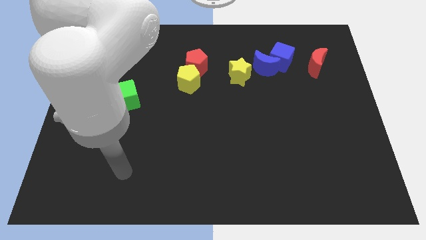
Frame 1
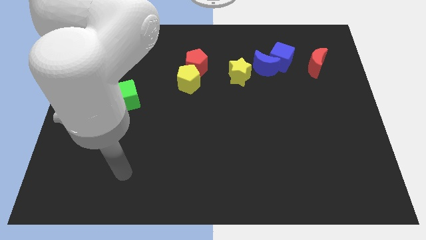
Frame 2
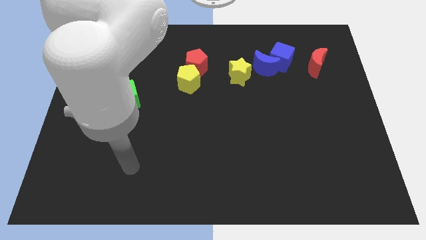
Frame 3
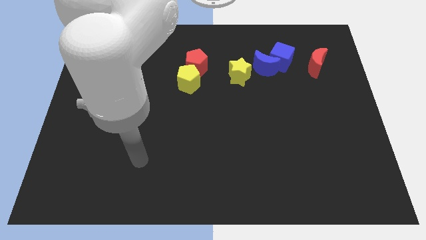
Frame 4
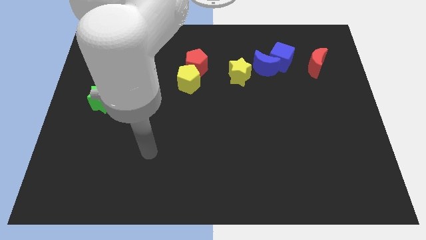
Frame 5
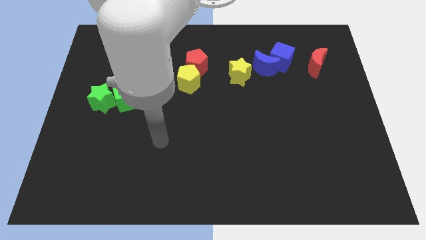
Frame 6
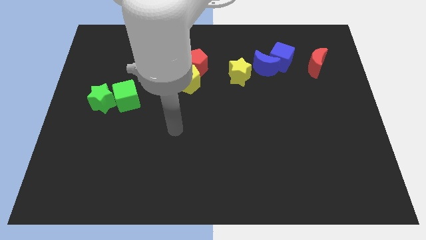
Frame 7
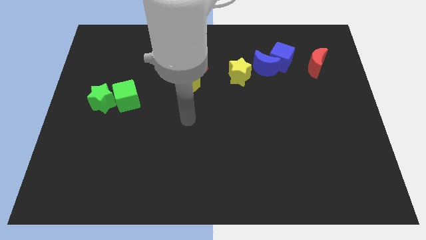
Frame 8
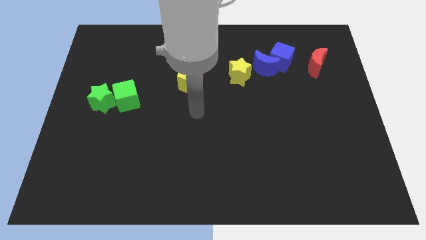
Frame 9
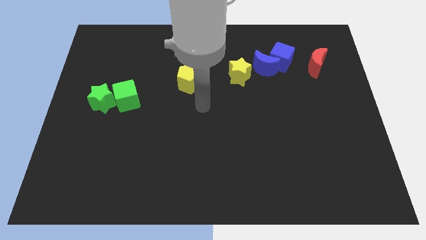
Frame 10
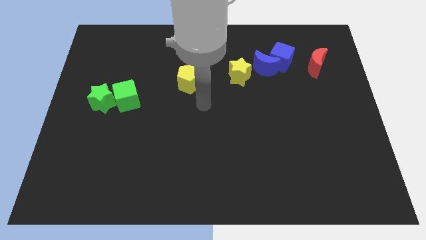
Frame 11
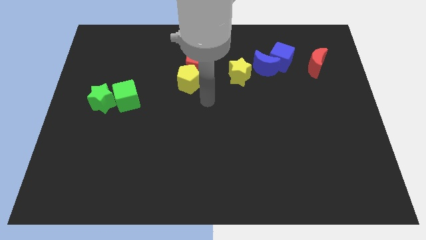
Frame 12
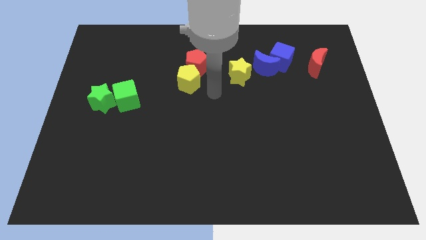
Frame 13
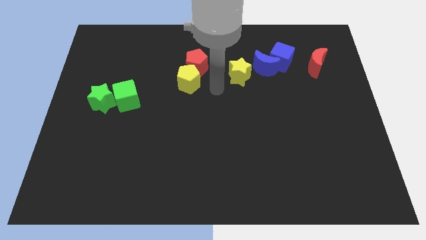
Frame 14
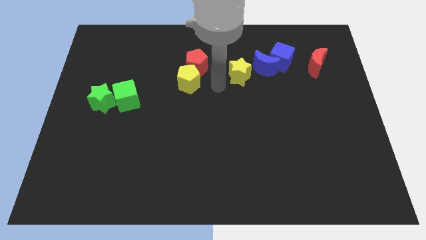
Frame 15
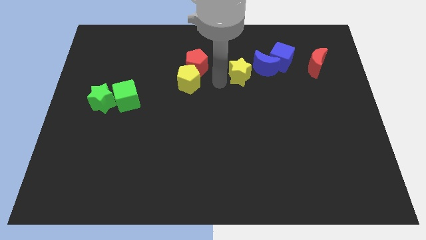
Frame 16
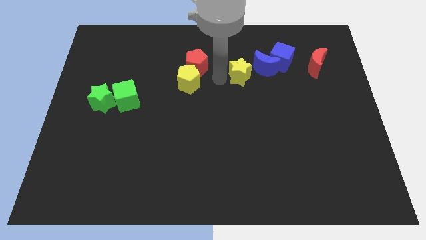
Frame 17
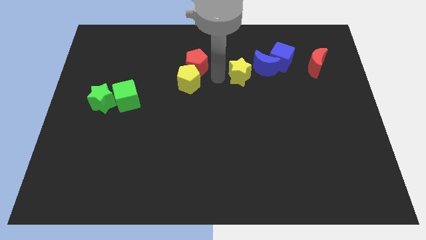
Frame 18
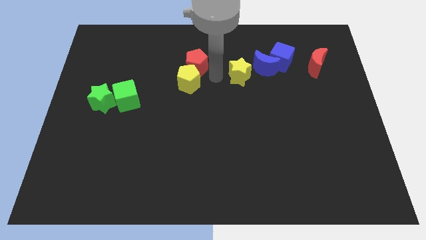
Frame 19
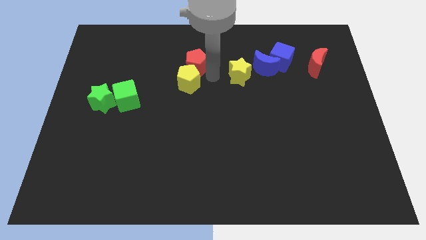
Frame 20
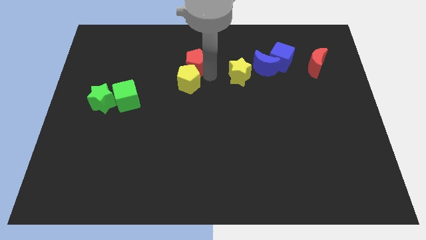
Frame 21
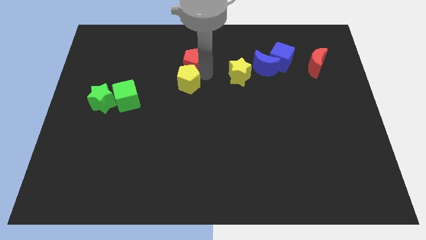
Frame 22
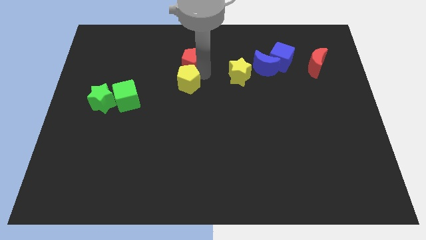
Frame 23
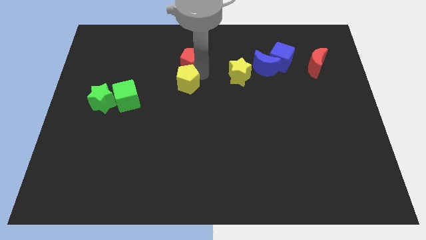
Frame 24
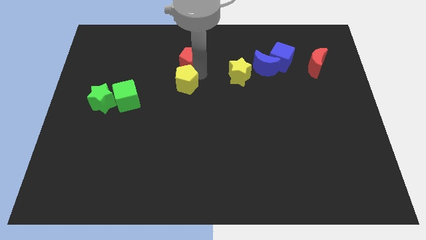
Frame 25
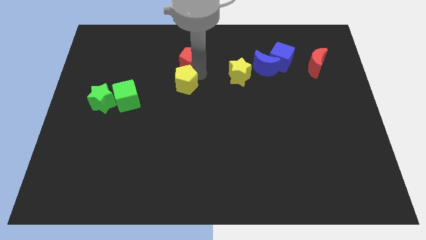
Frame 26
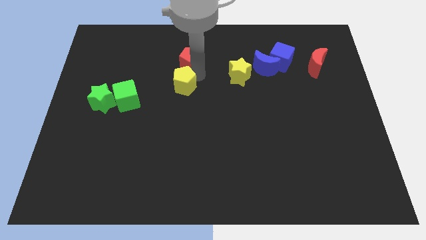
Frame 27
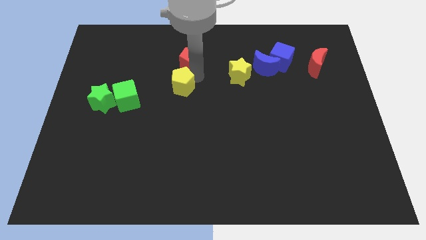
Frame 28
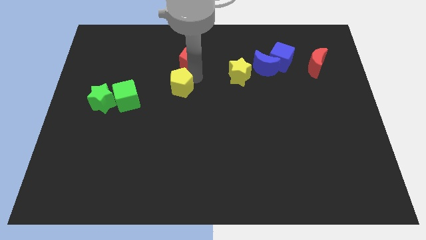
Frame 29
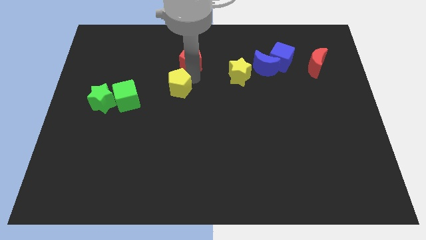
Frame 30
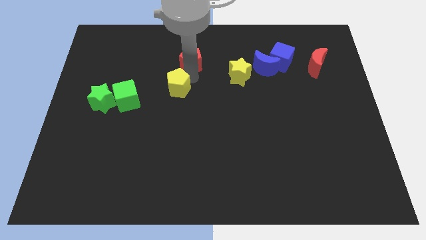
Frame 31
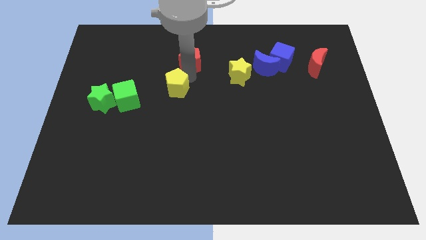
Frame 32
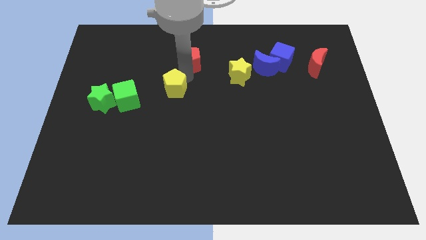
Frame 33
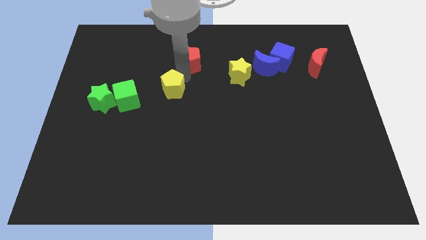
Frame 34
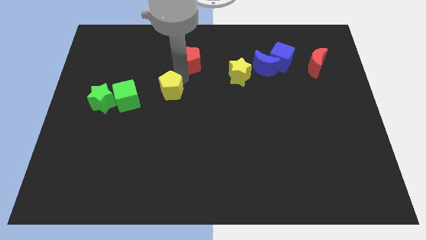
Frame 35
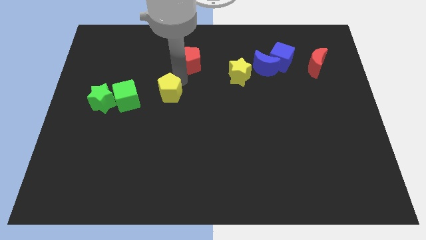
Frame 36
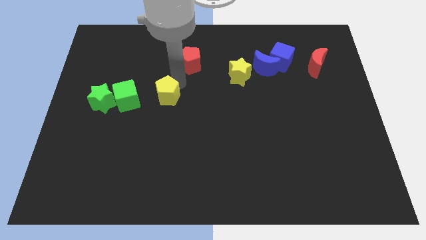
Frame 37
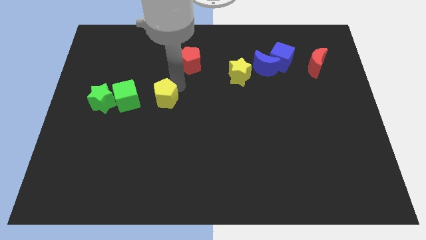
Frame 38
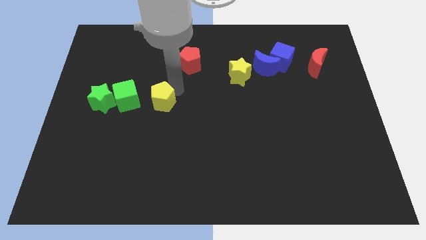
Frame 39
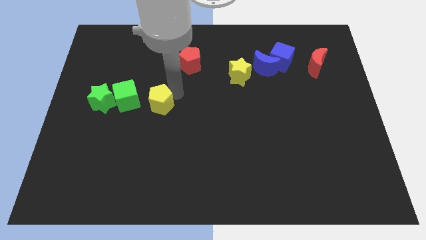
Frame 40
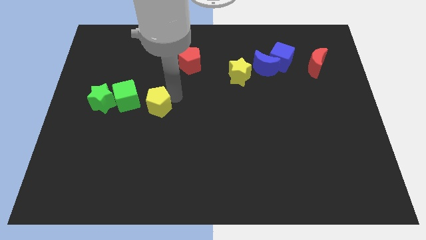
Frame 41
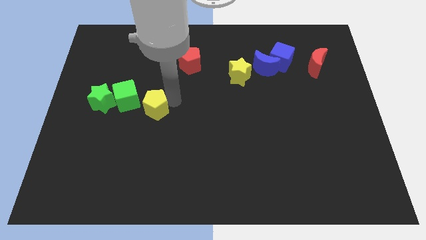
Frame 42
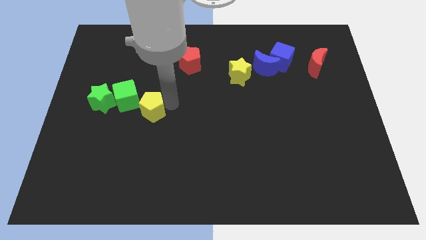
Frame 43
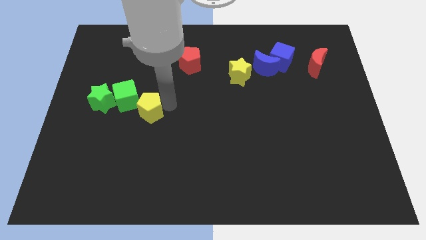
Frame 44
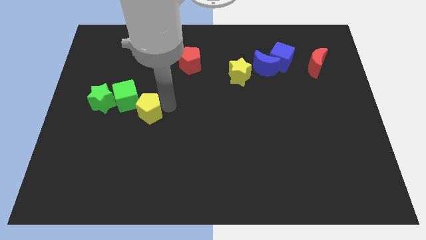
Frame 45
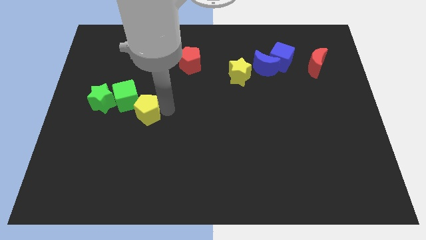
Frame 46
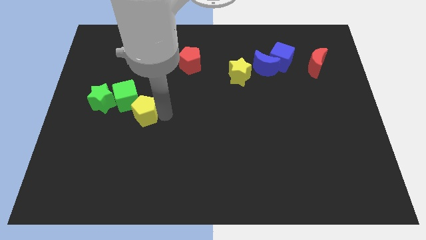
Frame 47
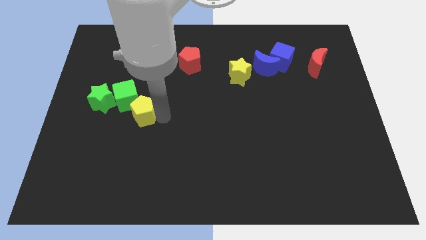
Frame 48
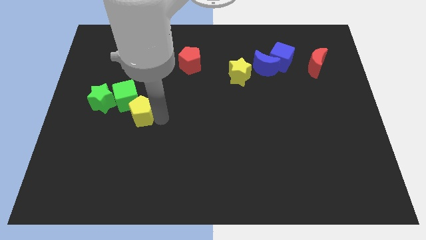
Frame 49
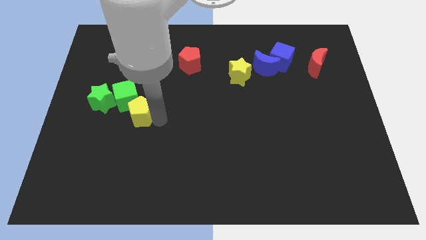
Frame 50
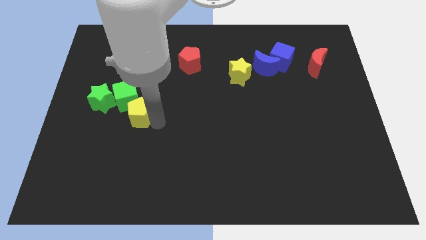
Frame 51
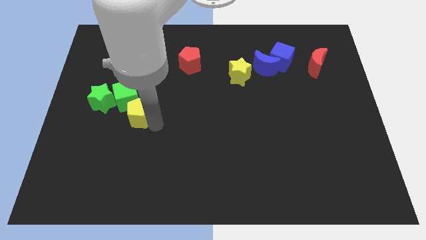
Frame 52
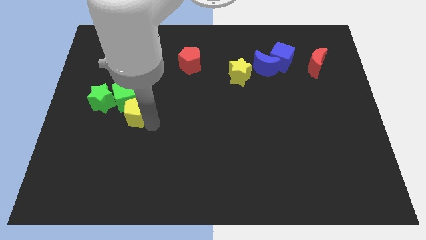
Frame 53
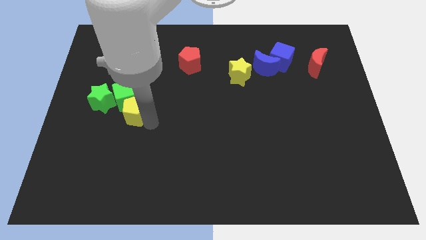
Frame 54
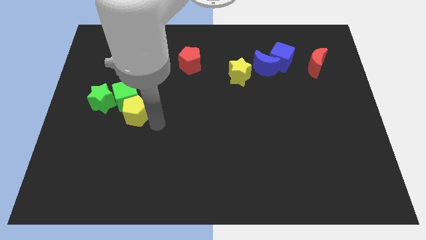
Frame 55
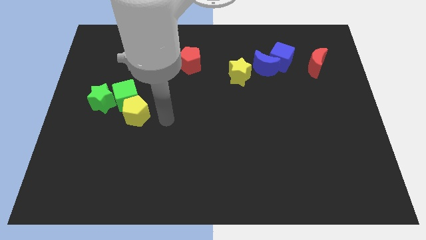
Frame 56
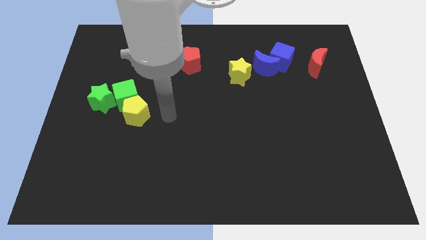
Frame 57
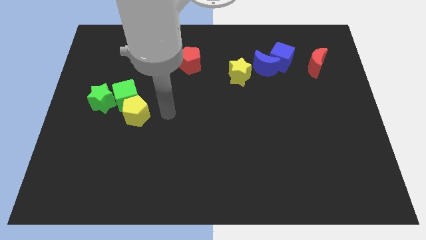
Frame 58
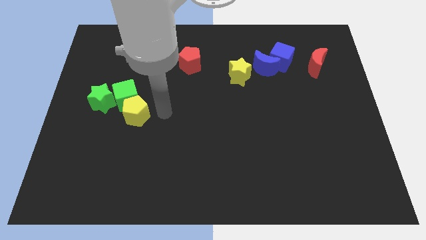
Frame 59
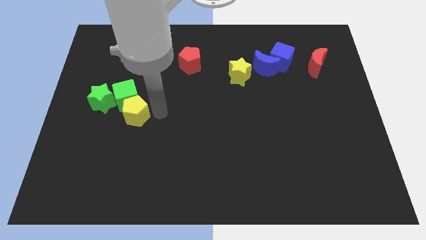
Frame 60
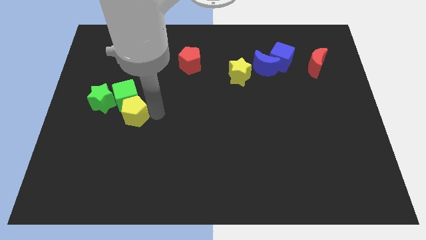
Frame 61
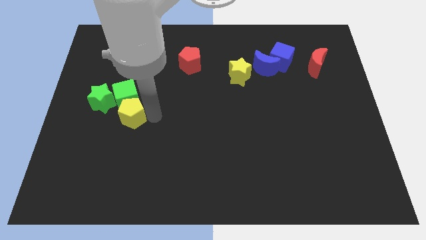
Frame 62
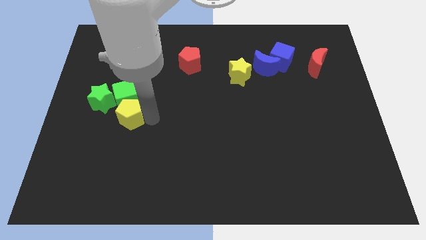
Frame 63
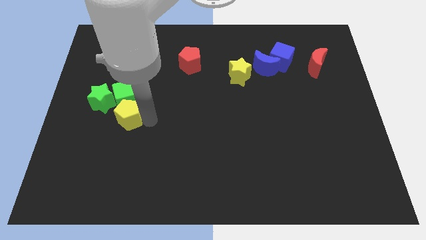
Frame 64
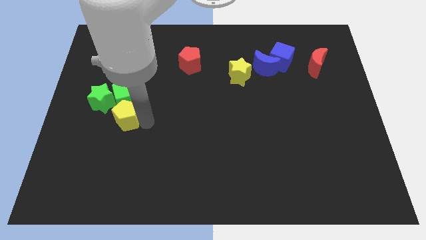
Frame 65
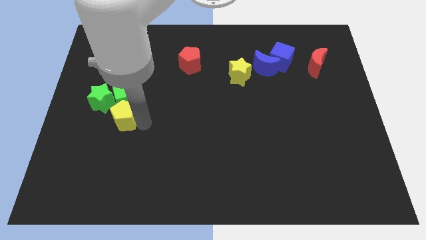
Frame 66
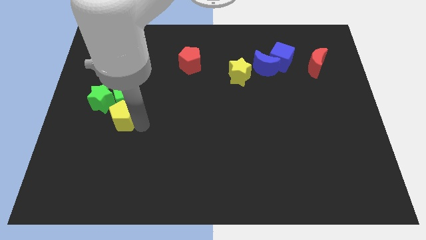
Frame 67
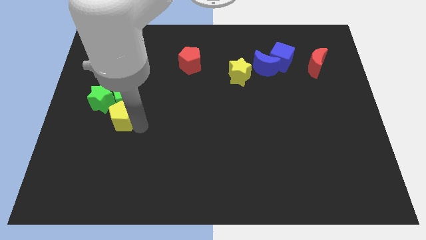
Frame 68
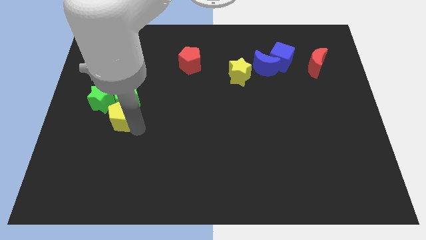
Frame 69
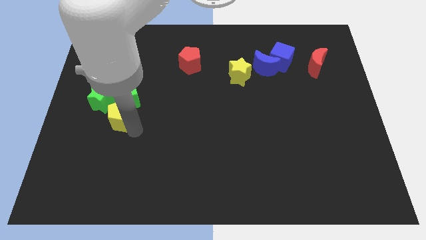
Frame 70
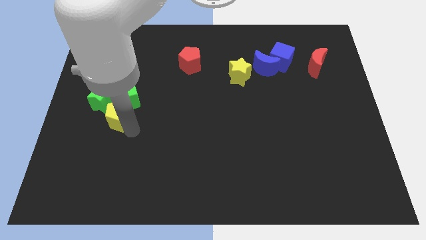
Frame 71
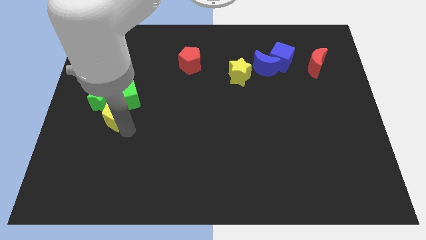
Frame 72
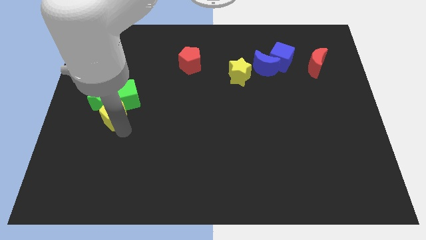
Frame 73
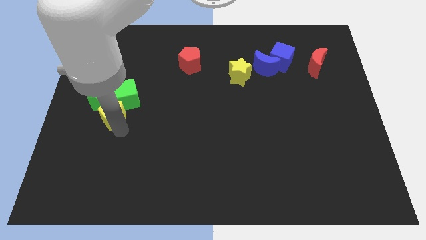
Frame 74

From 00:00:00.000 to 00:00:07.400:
slide the yellow pentagon to the green star

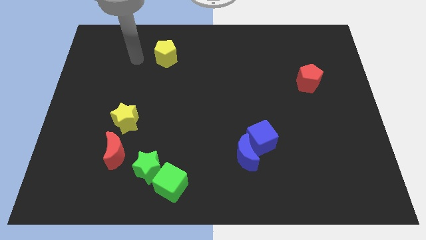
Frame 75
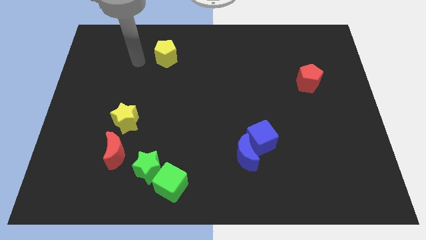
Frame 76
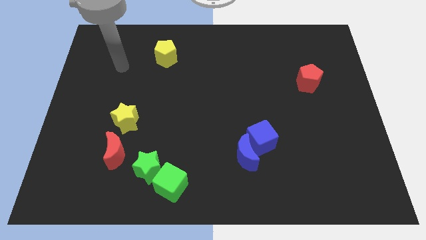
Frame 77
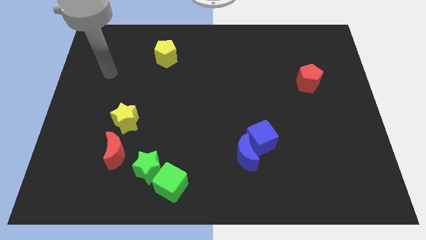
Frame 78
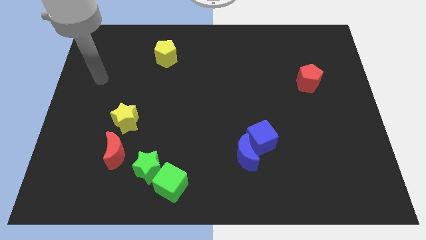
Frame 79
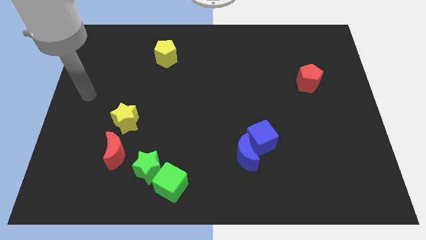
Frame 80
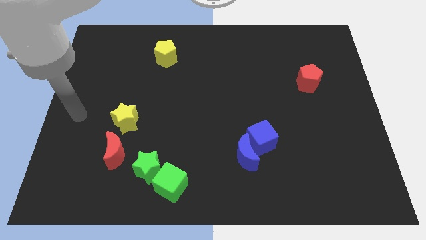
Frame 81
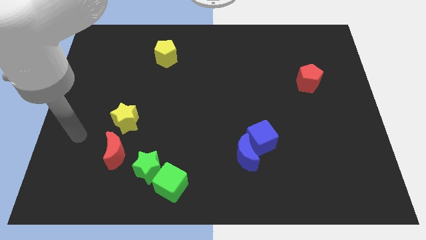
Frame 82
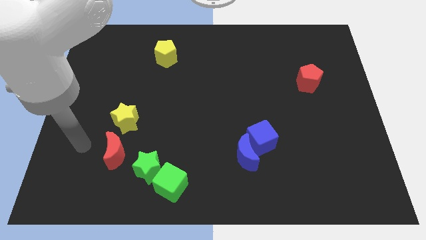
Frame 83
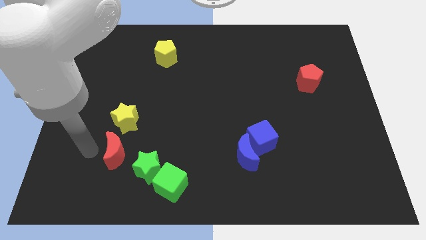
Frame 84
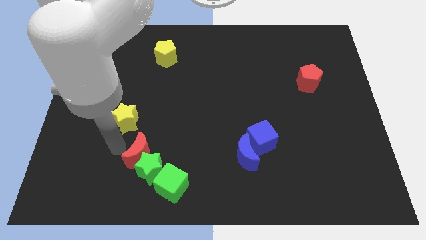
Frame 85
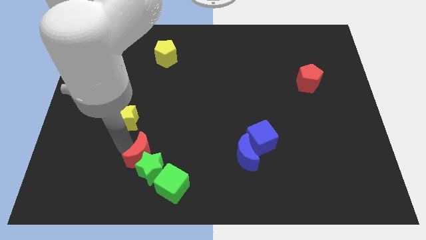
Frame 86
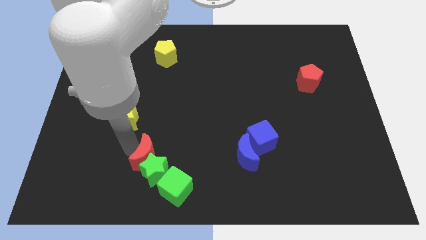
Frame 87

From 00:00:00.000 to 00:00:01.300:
push the red moon next to the green star
